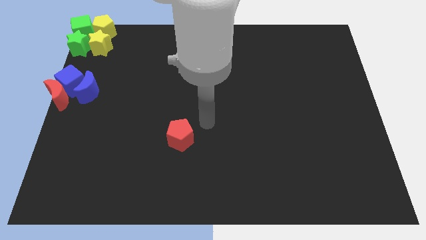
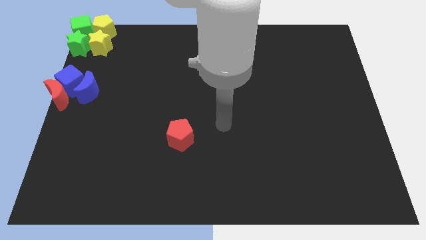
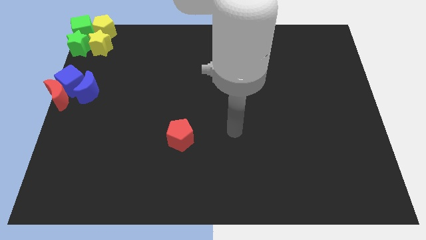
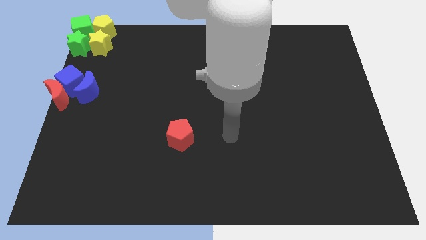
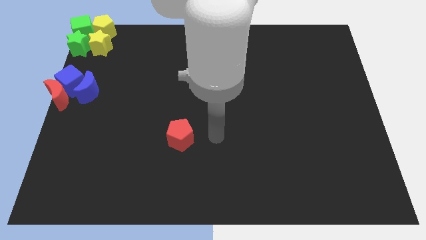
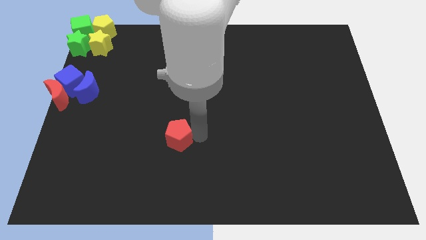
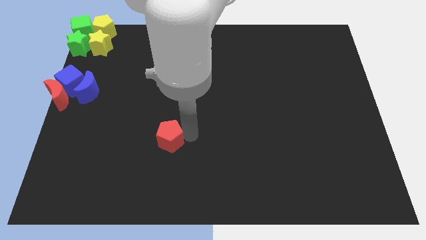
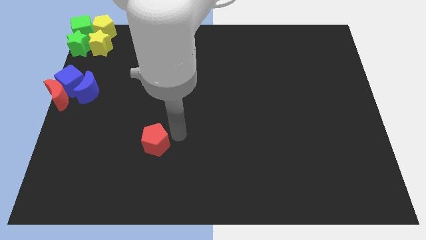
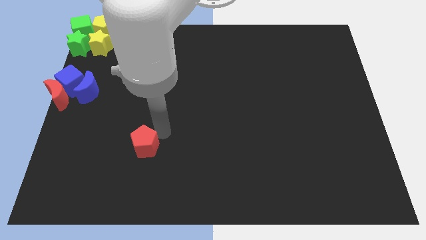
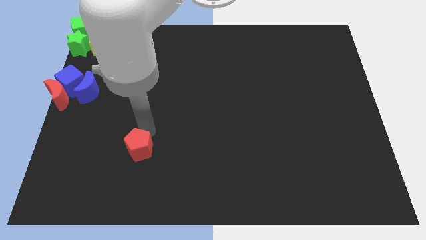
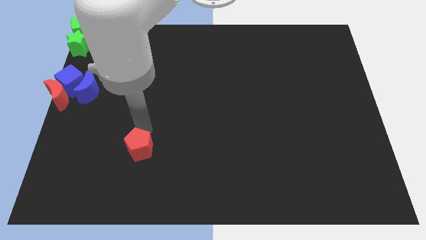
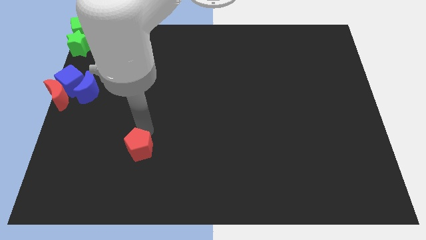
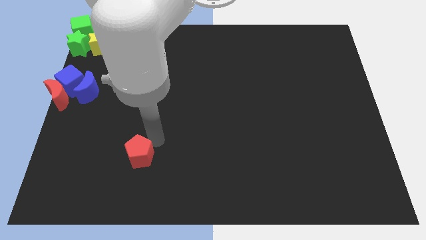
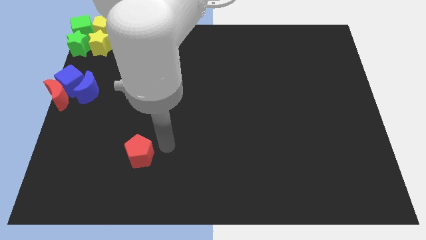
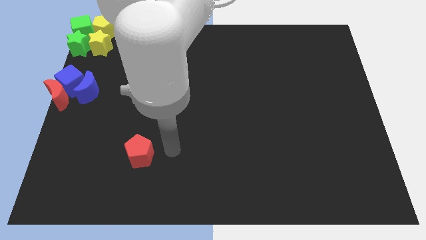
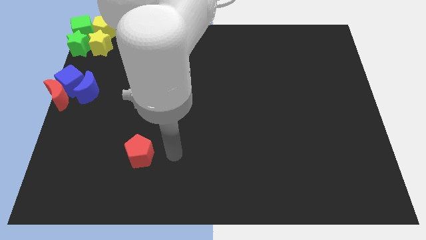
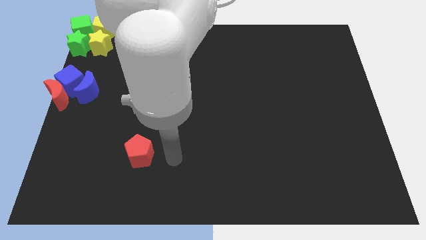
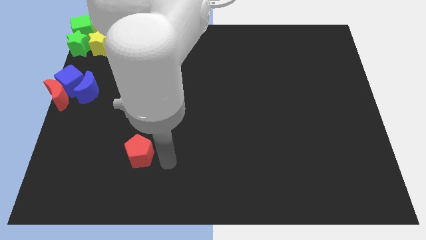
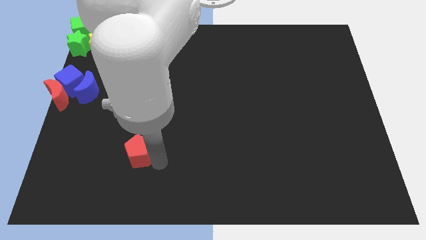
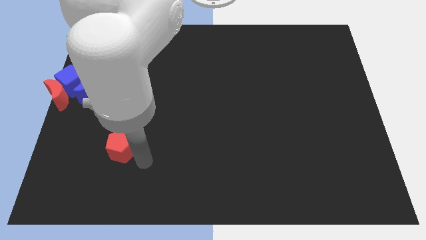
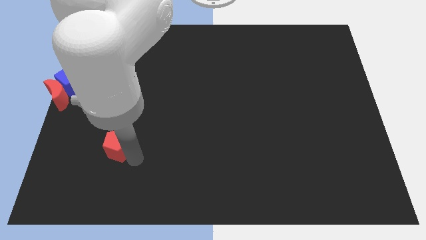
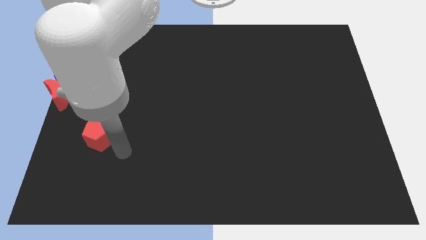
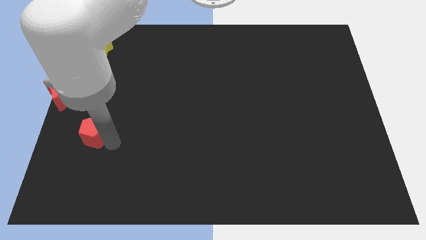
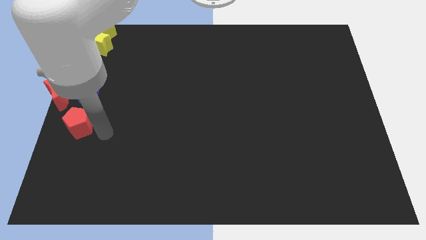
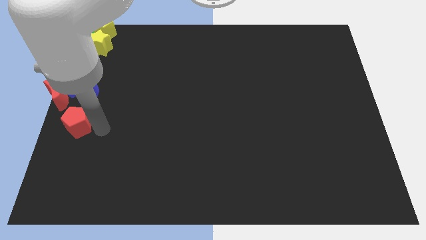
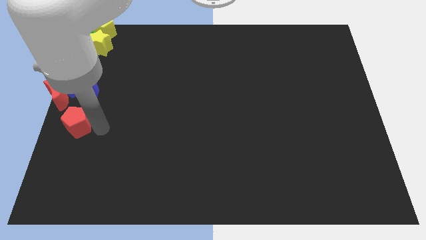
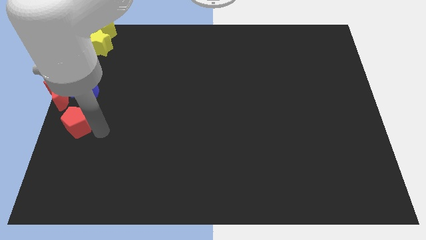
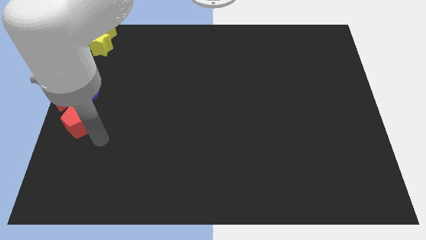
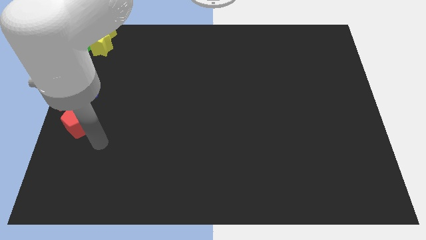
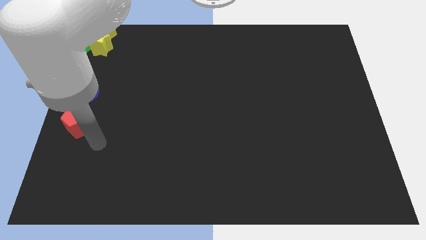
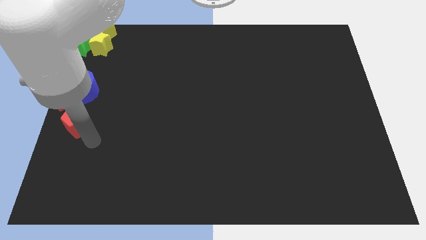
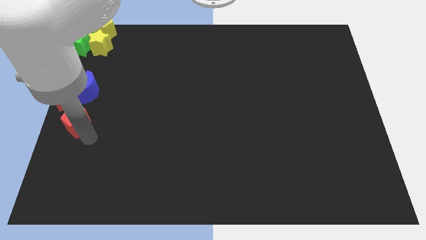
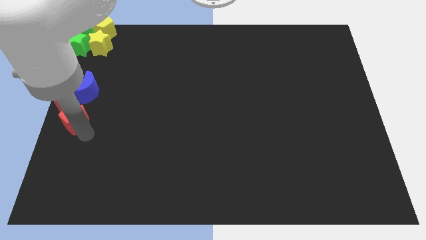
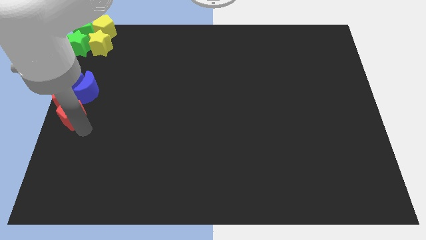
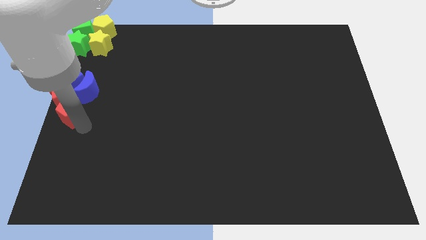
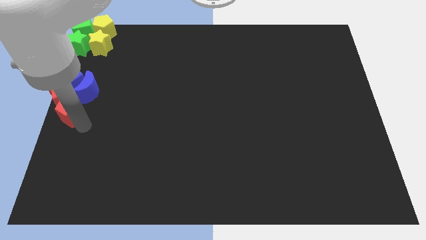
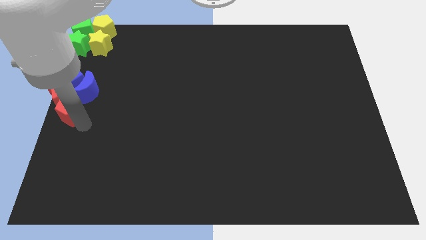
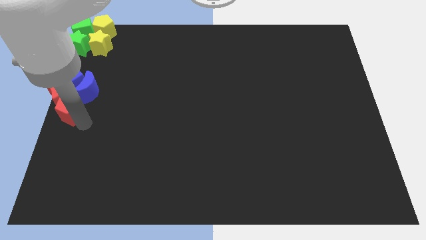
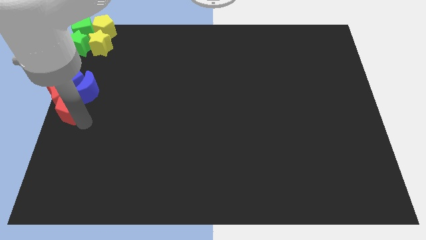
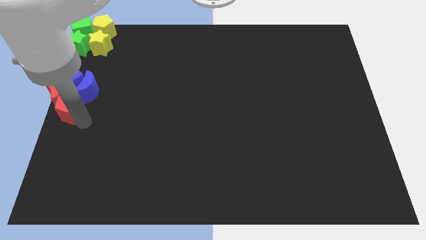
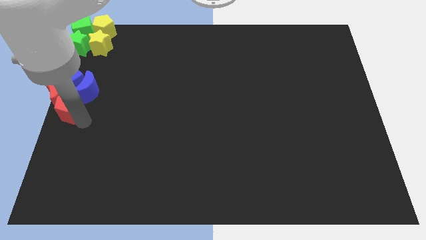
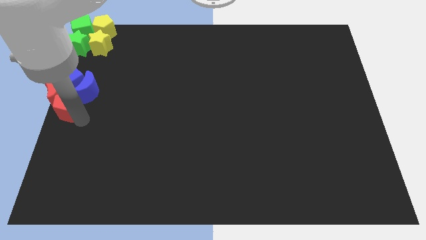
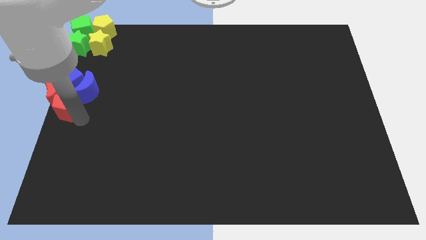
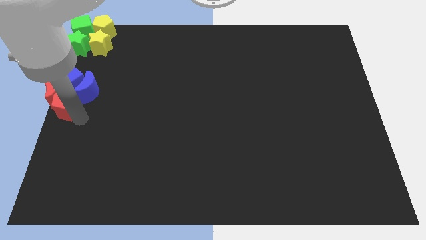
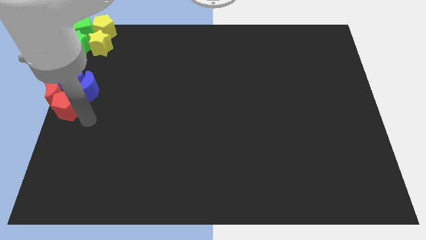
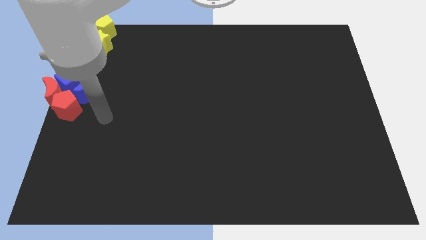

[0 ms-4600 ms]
push red pentagon to the left center

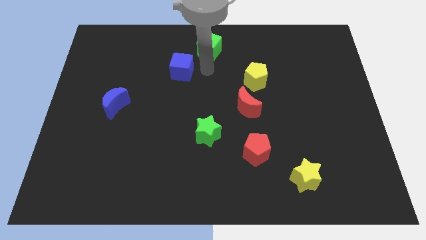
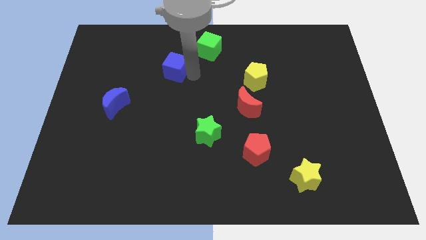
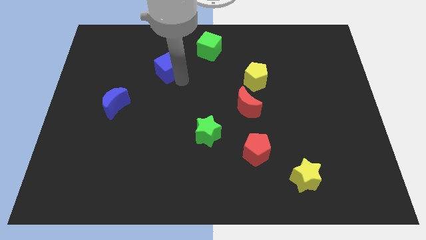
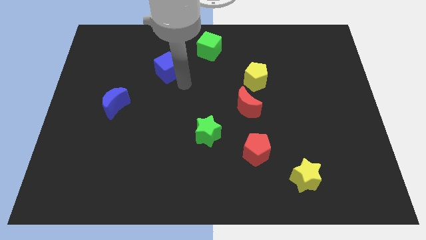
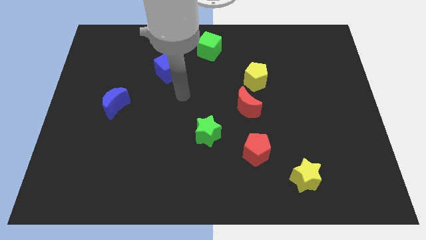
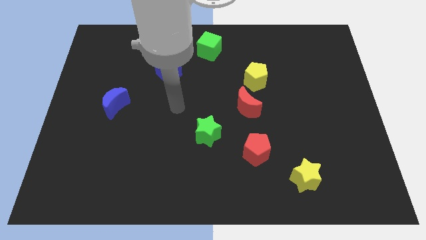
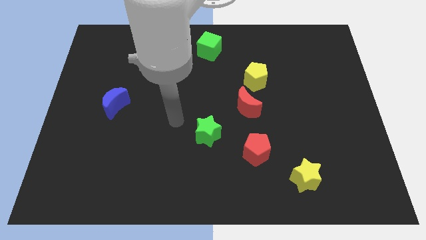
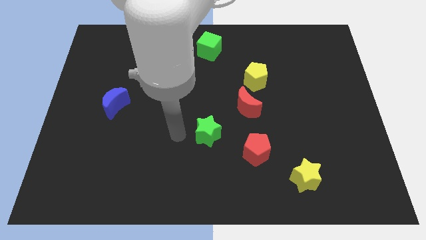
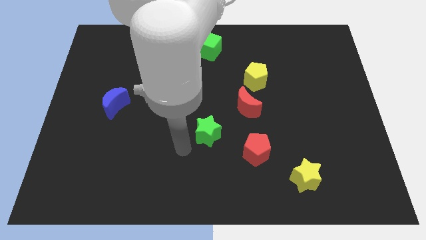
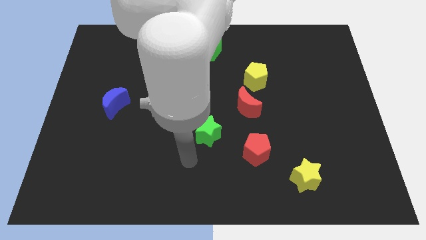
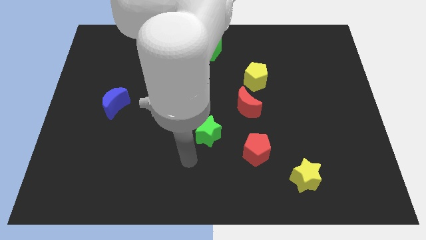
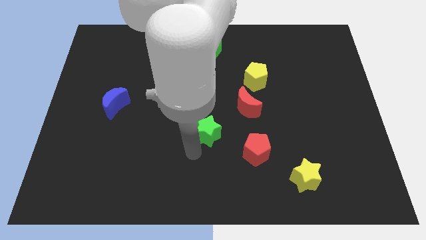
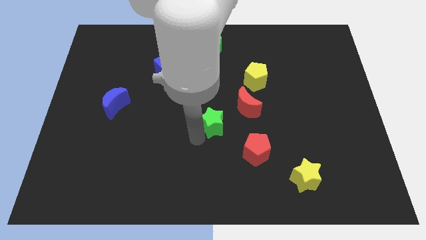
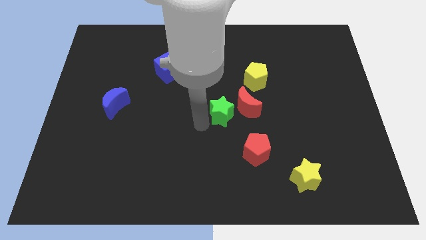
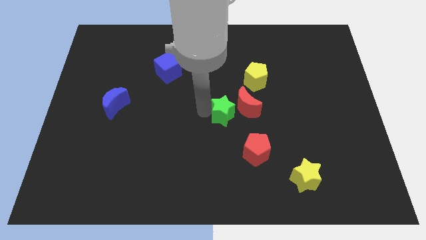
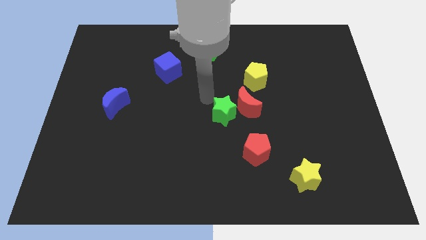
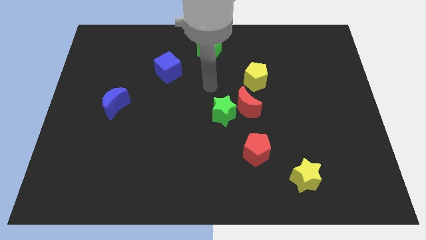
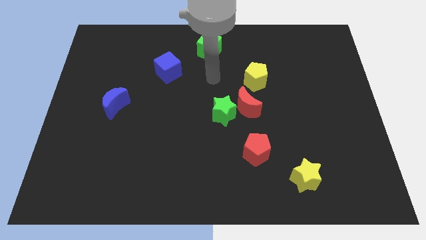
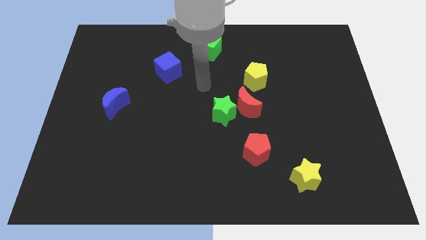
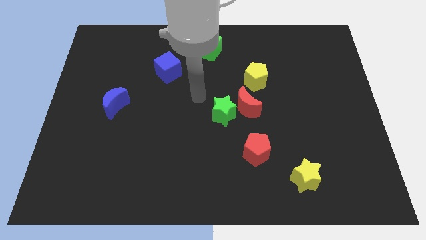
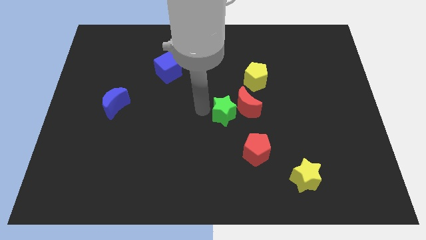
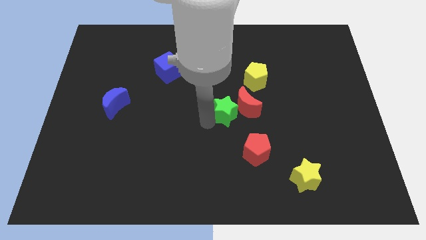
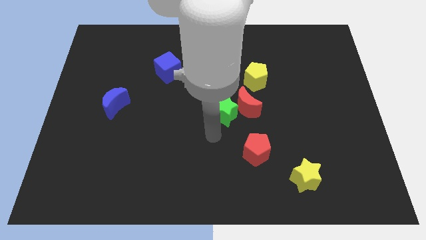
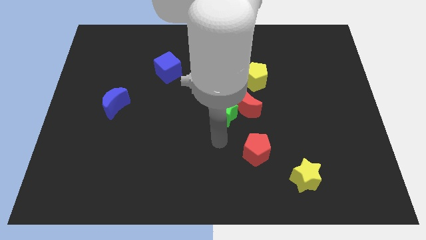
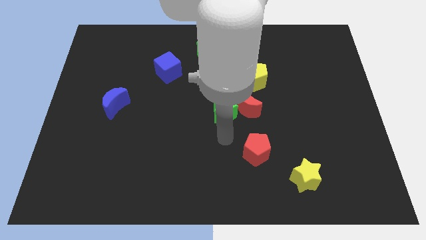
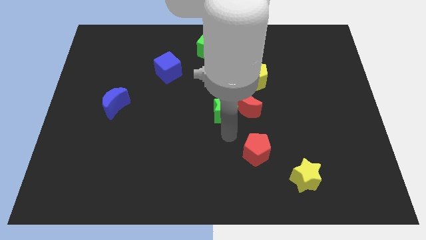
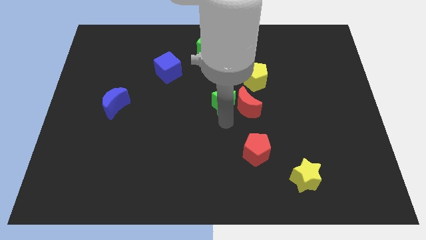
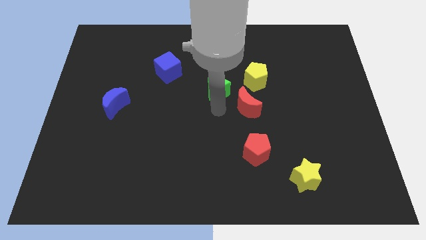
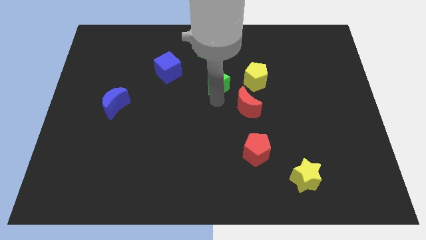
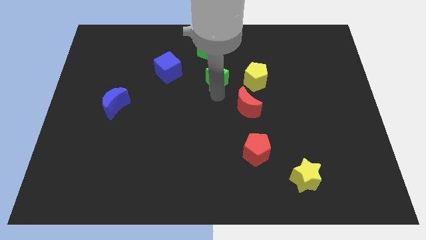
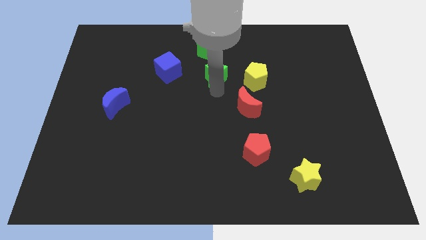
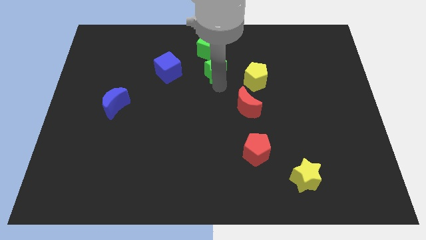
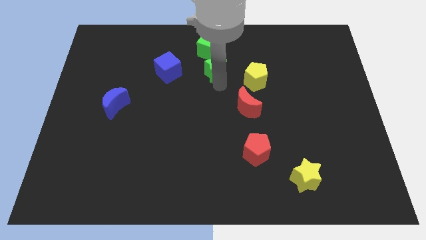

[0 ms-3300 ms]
place the green star down to the green cube

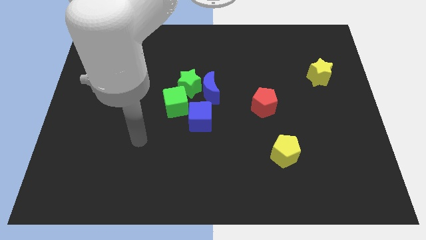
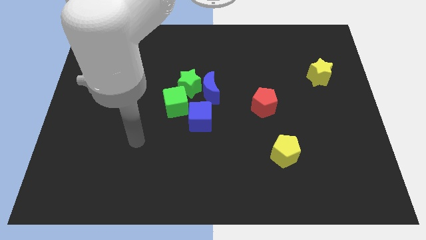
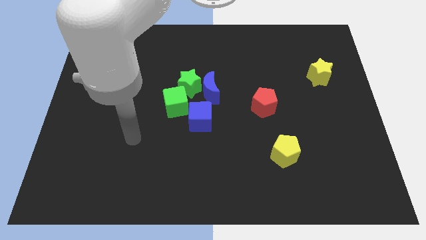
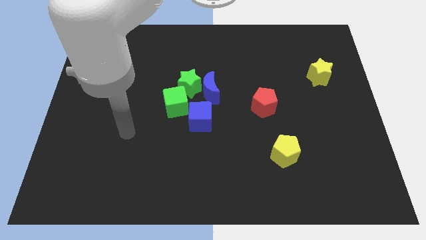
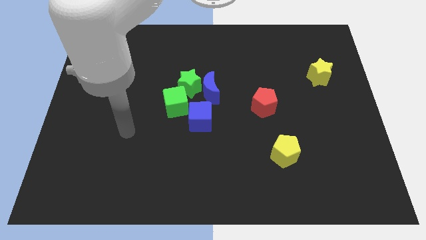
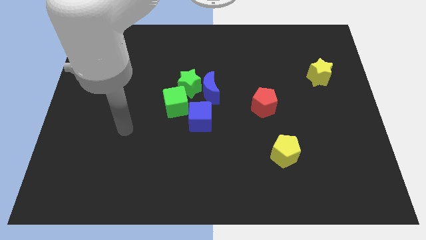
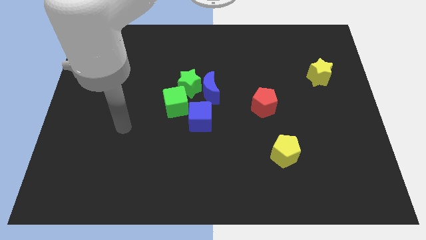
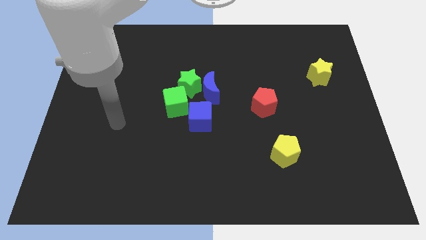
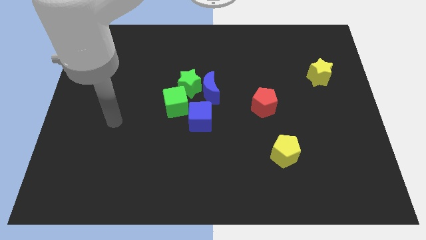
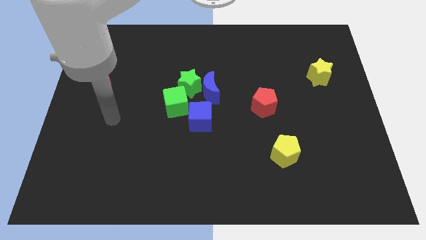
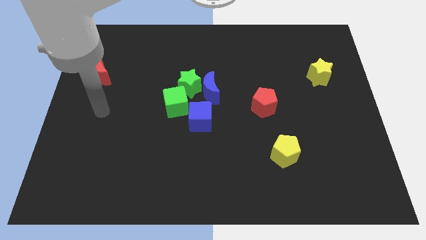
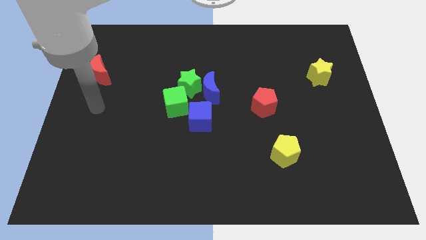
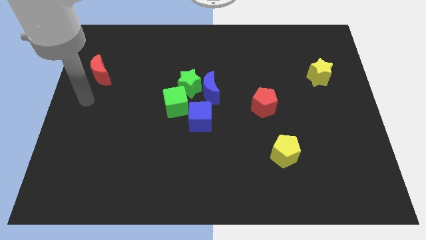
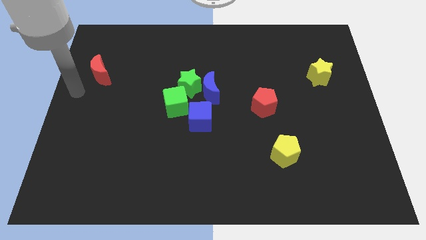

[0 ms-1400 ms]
move arm left below the red moon
